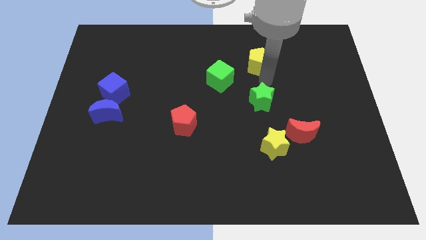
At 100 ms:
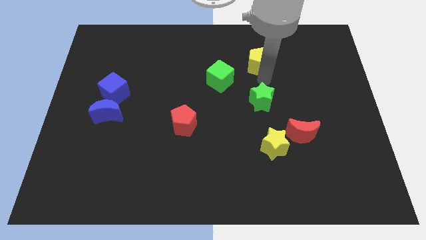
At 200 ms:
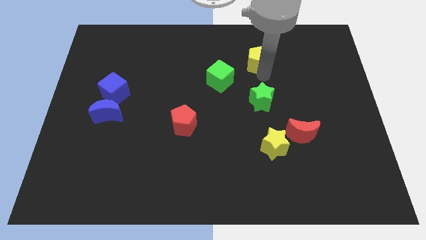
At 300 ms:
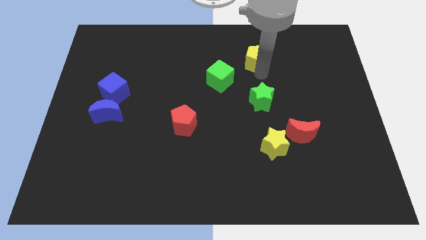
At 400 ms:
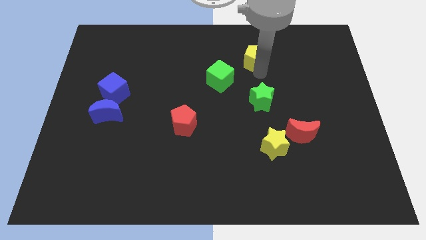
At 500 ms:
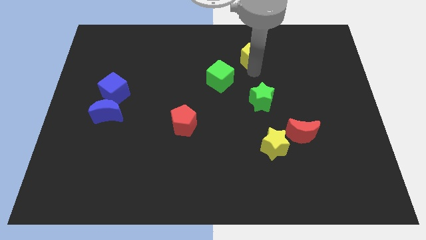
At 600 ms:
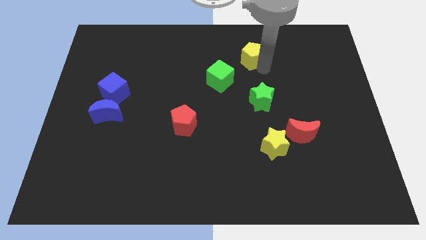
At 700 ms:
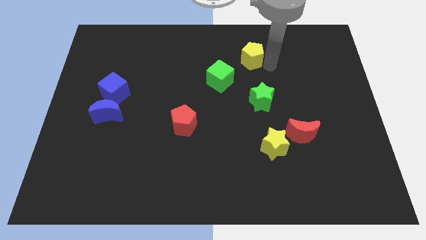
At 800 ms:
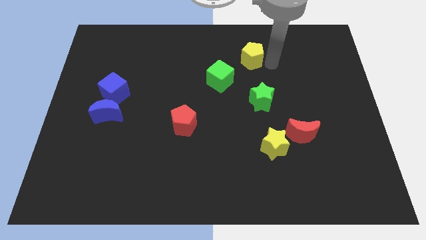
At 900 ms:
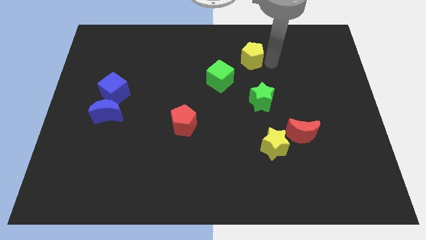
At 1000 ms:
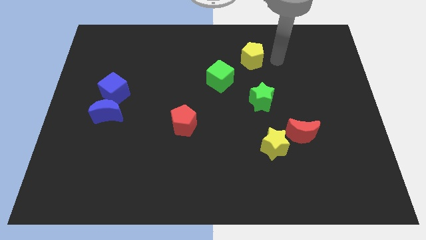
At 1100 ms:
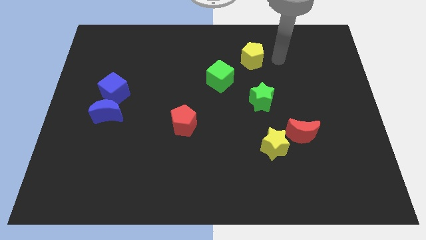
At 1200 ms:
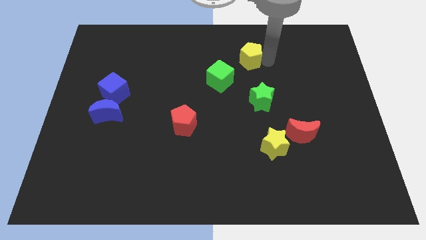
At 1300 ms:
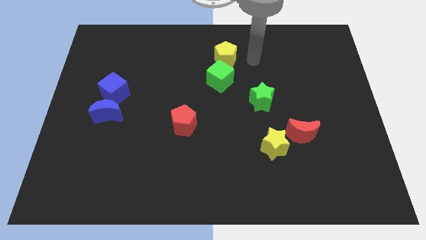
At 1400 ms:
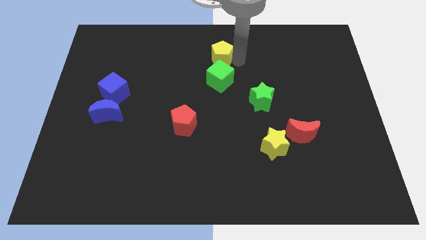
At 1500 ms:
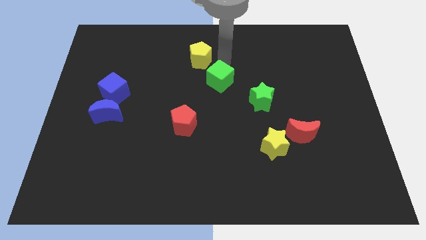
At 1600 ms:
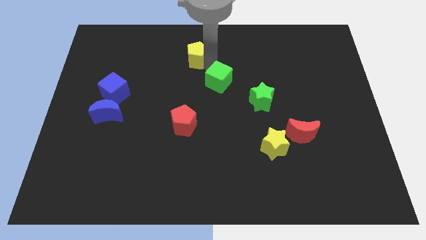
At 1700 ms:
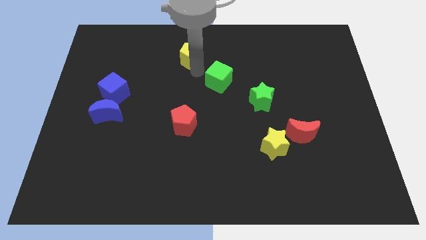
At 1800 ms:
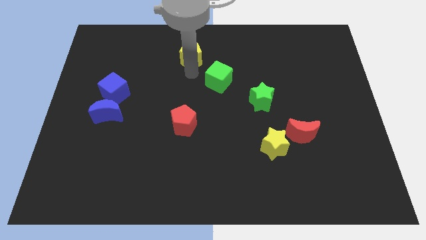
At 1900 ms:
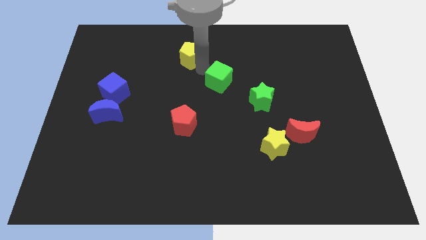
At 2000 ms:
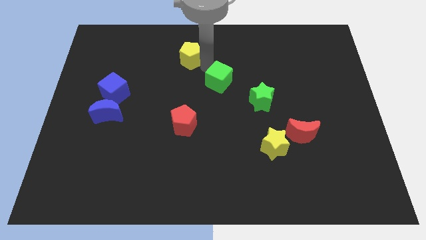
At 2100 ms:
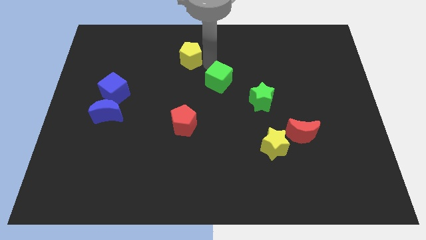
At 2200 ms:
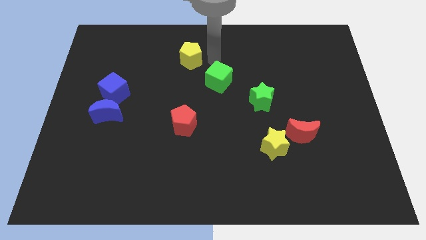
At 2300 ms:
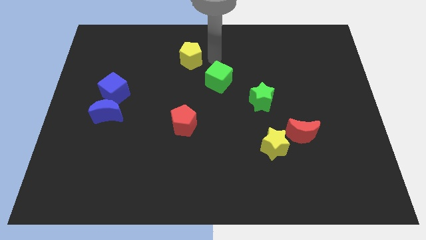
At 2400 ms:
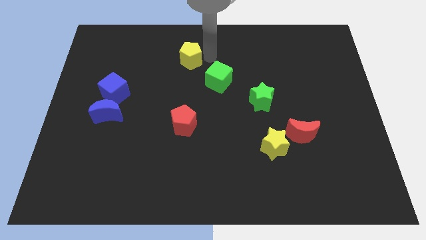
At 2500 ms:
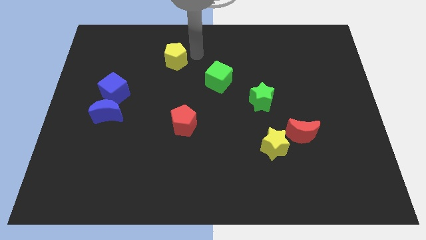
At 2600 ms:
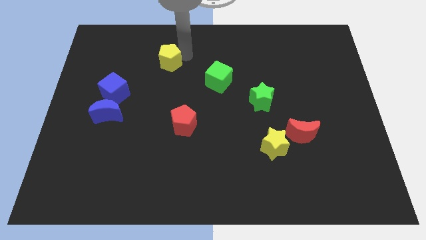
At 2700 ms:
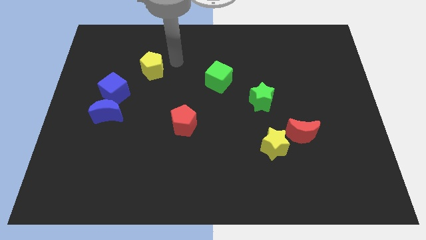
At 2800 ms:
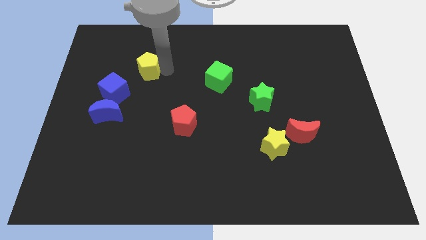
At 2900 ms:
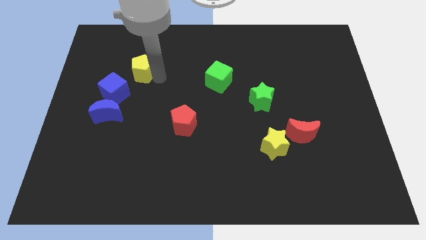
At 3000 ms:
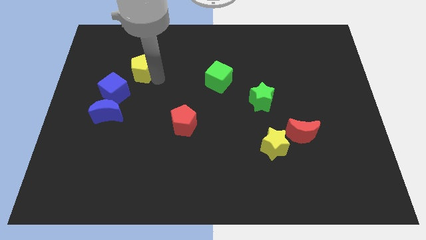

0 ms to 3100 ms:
push yellow pentagon towards blue cube

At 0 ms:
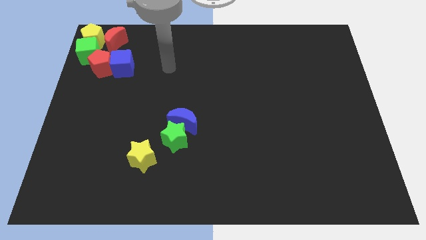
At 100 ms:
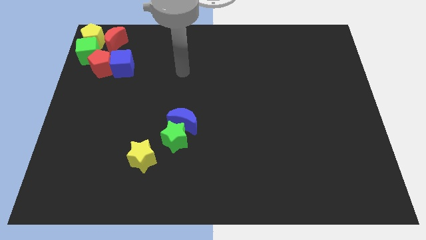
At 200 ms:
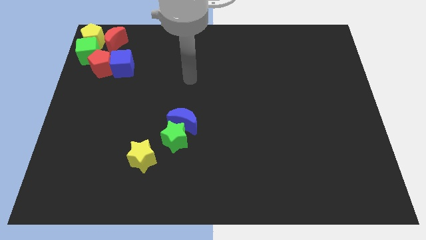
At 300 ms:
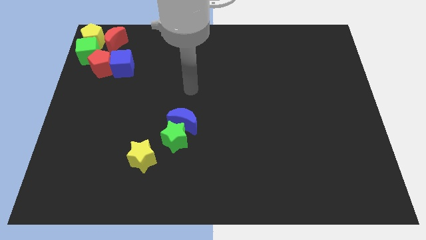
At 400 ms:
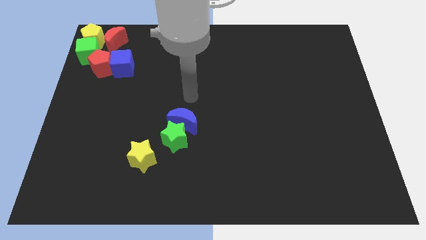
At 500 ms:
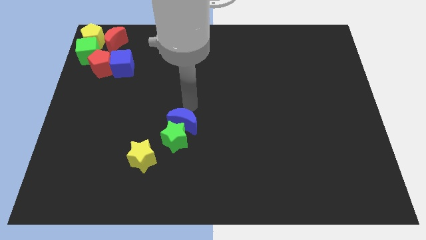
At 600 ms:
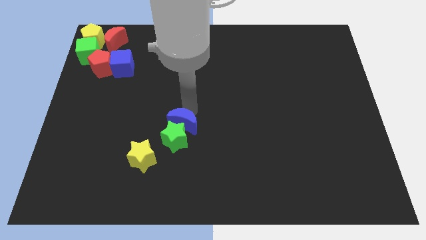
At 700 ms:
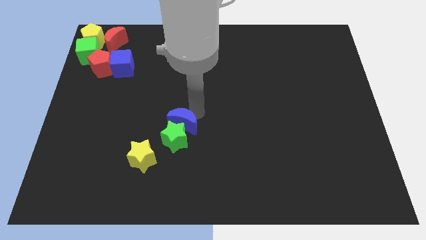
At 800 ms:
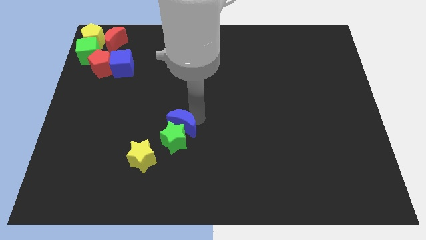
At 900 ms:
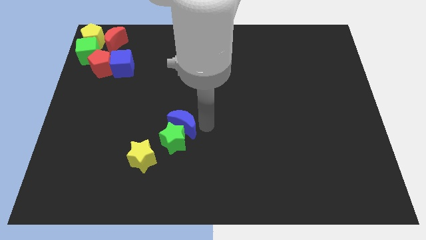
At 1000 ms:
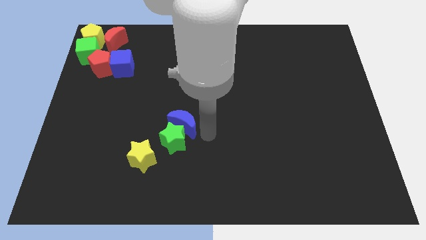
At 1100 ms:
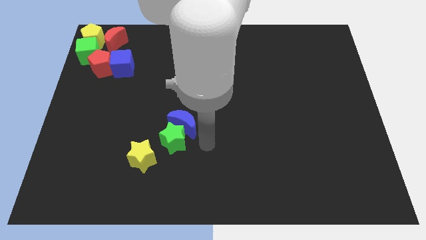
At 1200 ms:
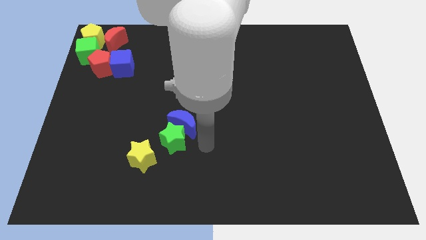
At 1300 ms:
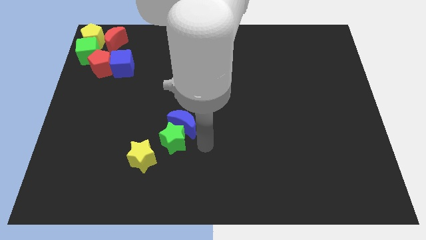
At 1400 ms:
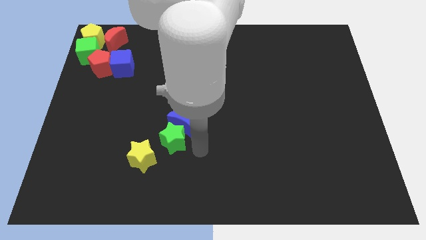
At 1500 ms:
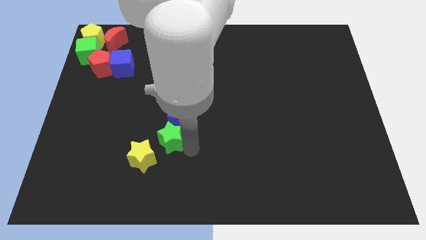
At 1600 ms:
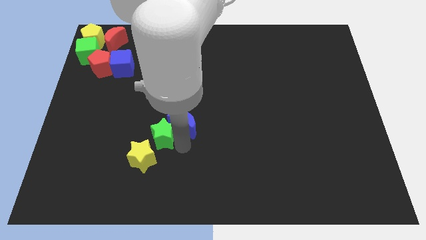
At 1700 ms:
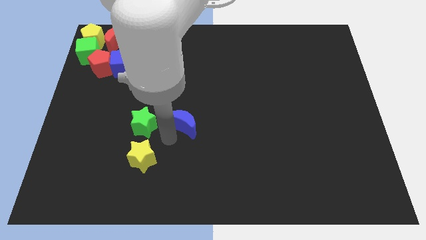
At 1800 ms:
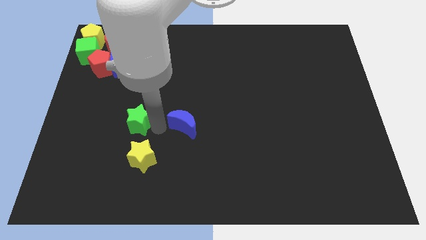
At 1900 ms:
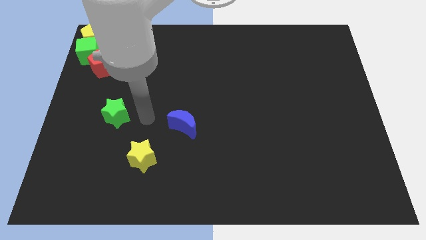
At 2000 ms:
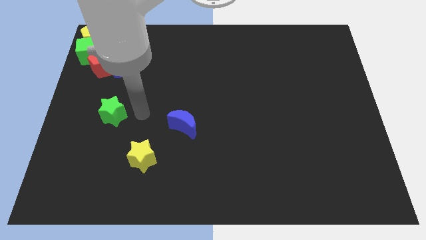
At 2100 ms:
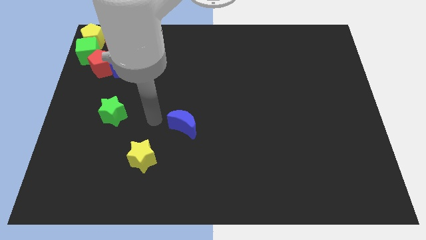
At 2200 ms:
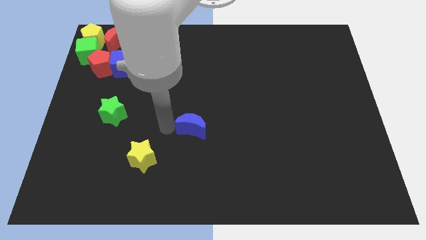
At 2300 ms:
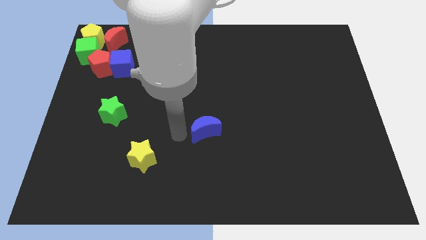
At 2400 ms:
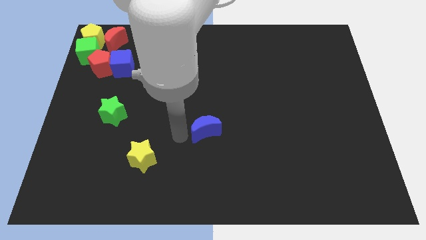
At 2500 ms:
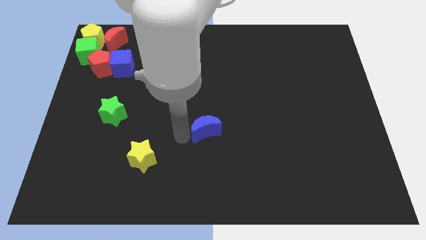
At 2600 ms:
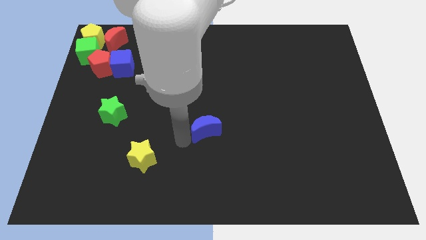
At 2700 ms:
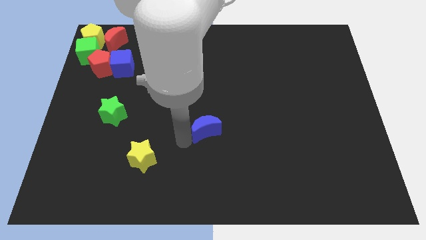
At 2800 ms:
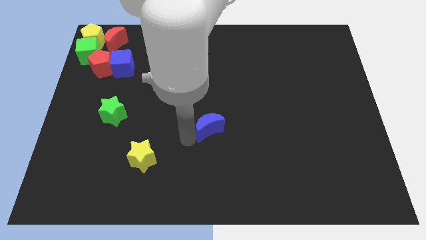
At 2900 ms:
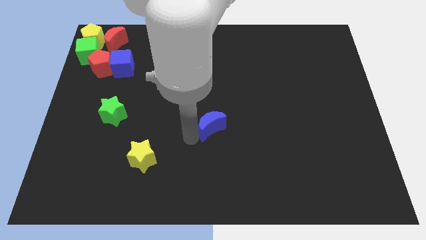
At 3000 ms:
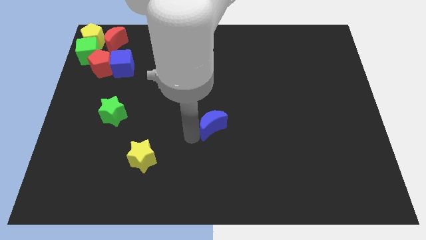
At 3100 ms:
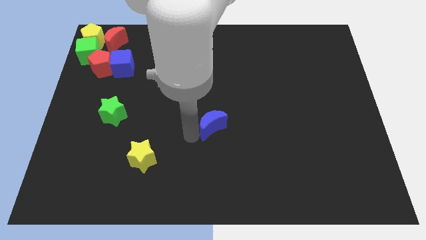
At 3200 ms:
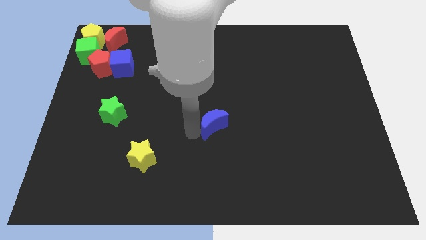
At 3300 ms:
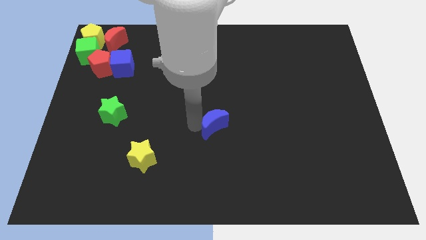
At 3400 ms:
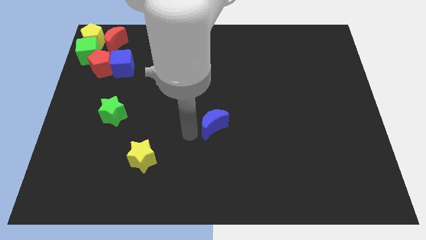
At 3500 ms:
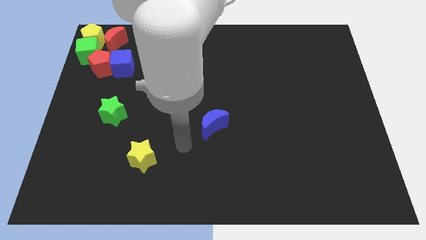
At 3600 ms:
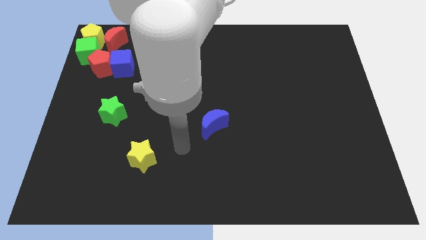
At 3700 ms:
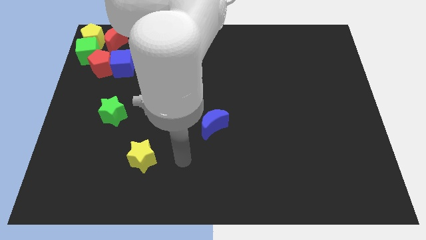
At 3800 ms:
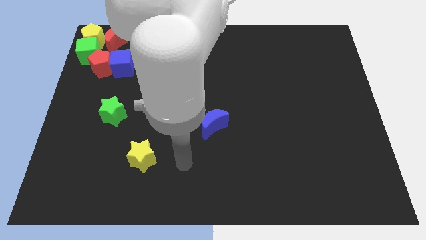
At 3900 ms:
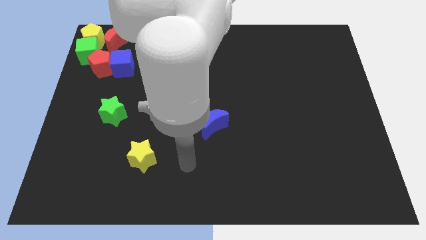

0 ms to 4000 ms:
separate the green star and the blue crescent

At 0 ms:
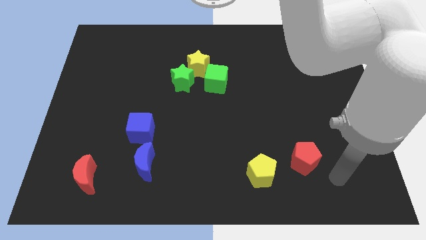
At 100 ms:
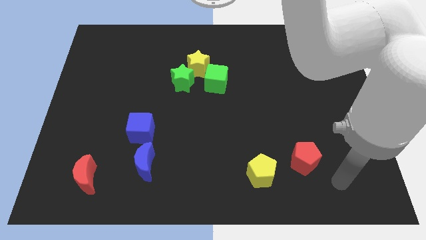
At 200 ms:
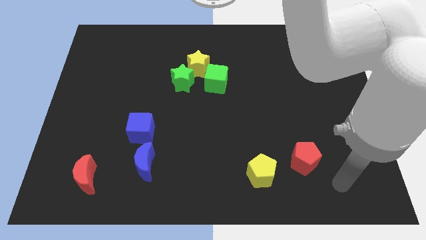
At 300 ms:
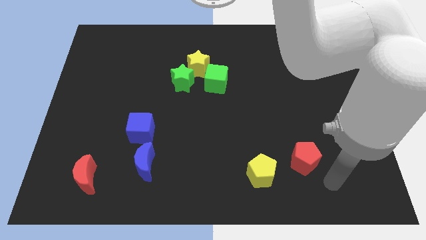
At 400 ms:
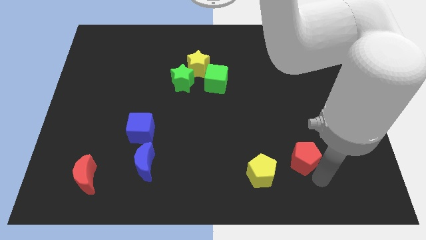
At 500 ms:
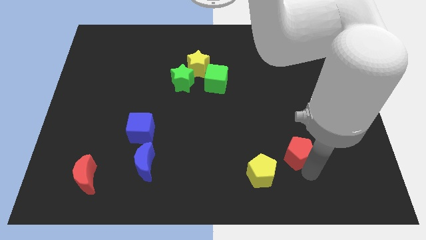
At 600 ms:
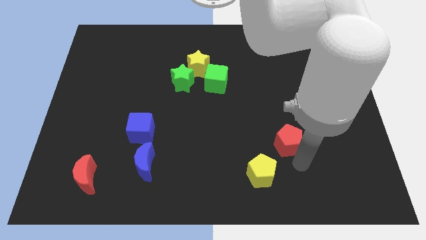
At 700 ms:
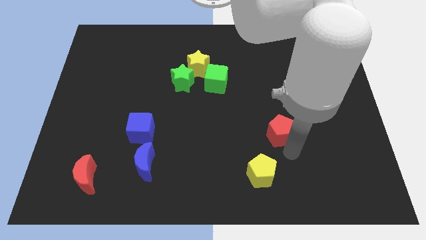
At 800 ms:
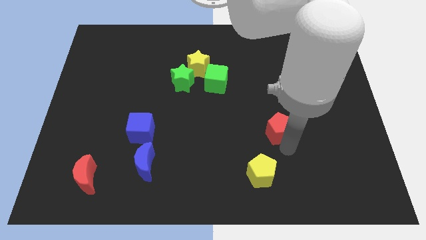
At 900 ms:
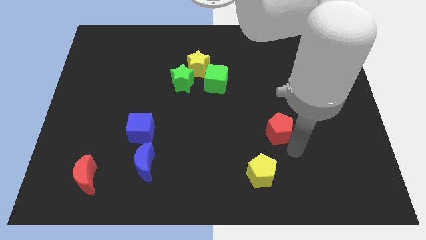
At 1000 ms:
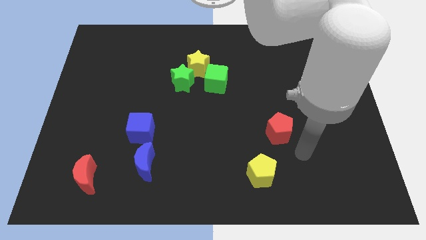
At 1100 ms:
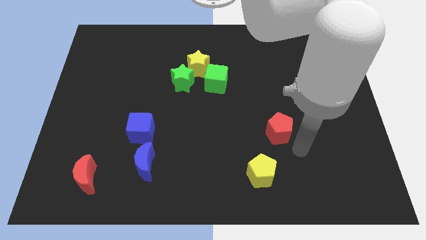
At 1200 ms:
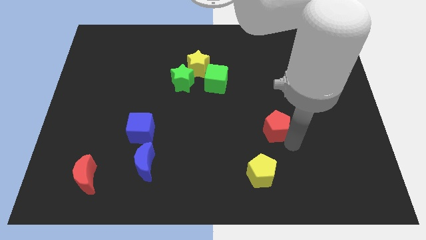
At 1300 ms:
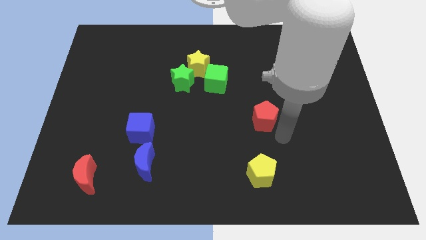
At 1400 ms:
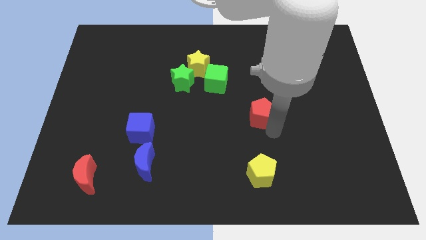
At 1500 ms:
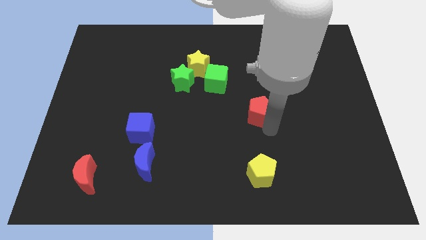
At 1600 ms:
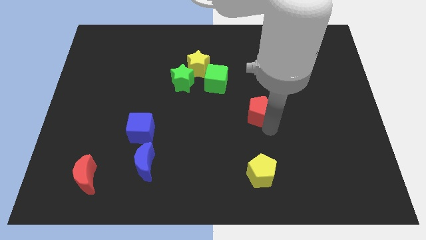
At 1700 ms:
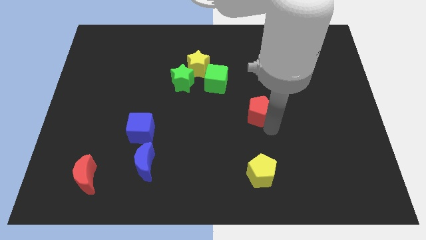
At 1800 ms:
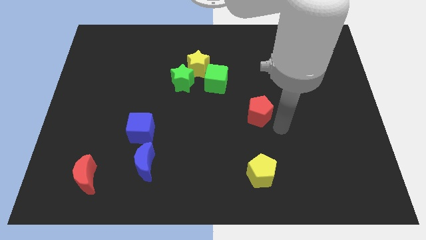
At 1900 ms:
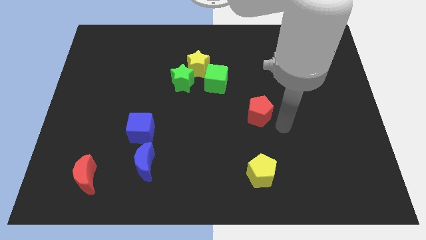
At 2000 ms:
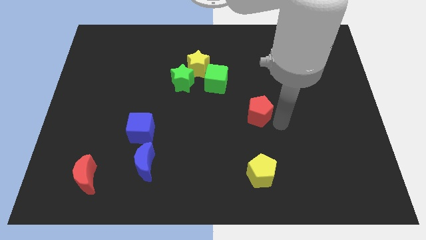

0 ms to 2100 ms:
place red pentagon above yellow pentagon
